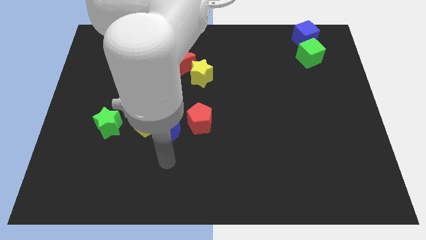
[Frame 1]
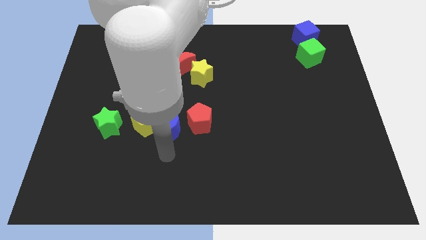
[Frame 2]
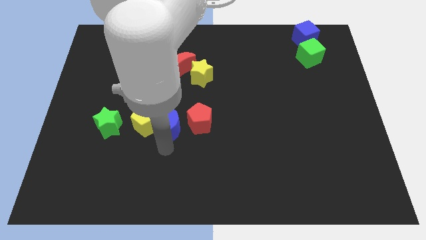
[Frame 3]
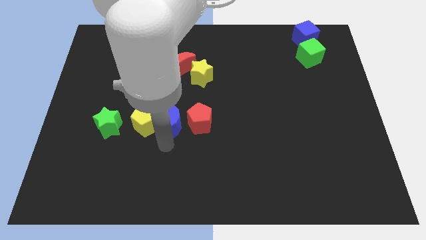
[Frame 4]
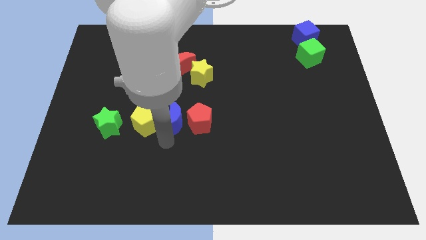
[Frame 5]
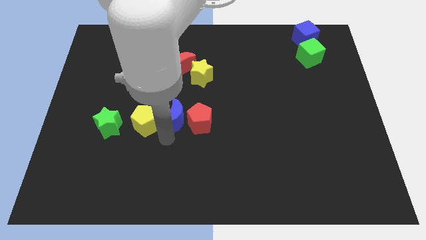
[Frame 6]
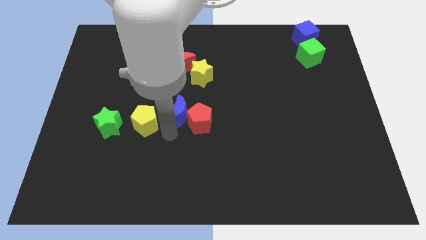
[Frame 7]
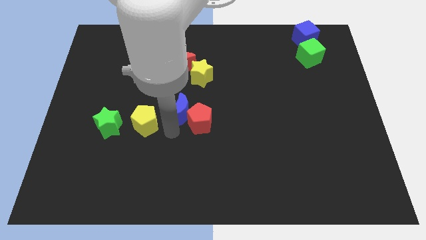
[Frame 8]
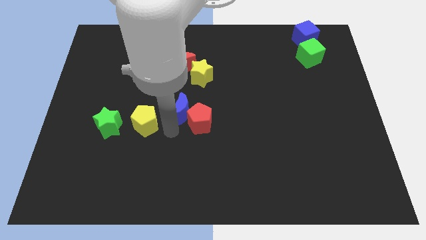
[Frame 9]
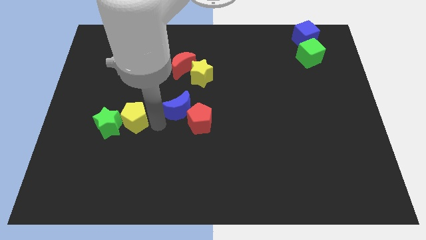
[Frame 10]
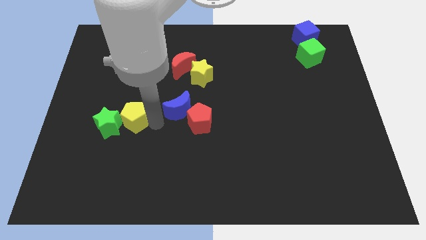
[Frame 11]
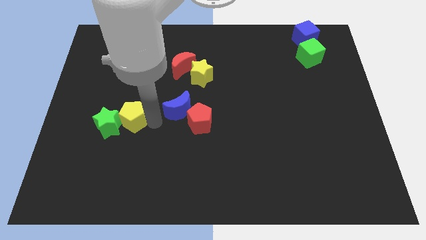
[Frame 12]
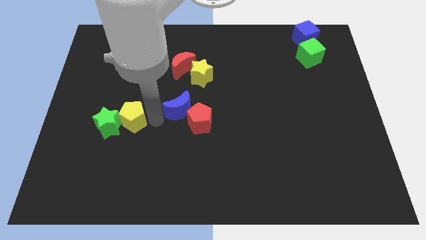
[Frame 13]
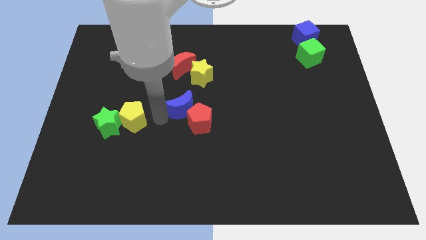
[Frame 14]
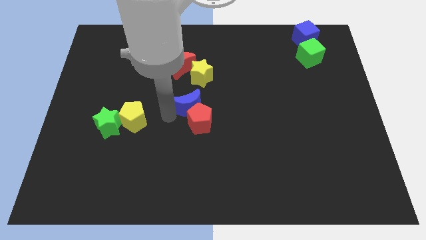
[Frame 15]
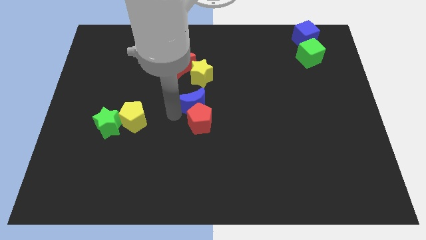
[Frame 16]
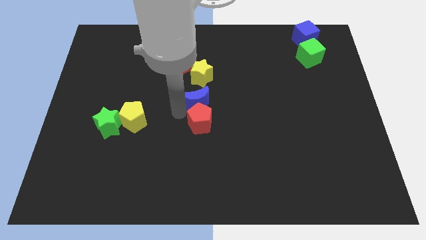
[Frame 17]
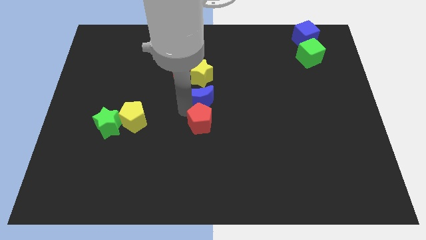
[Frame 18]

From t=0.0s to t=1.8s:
place the blue moon in between the yellow star and red pentagon

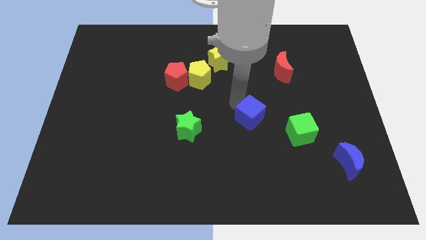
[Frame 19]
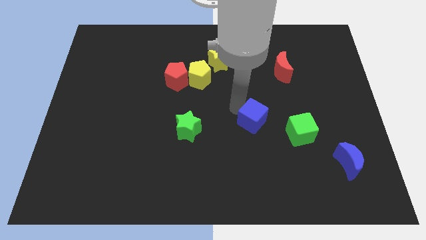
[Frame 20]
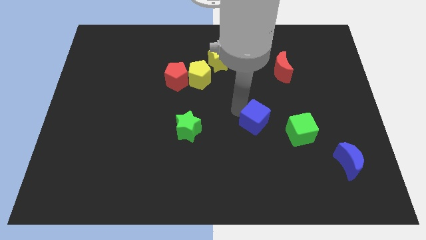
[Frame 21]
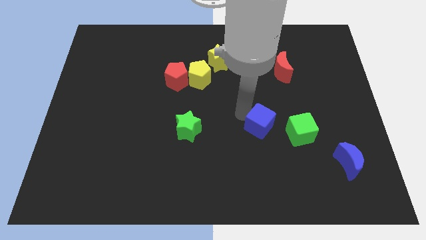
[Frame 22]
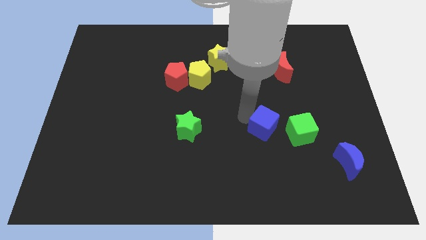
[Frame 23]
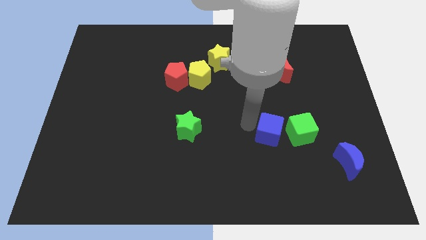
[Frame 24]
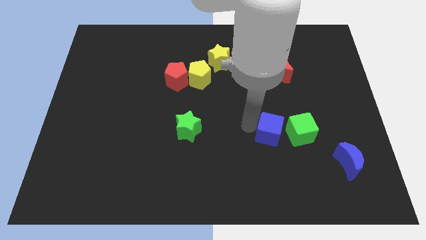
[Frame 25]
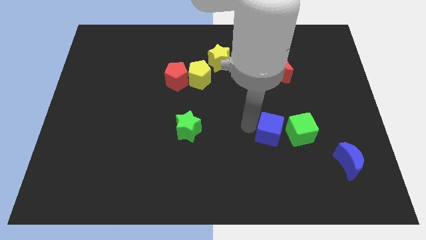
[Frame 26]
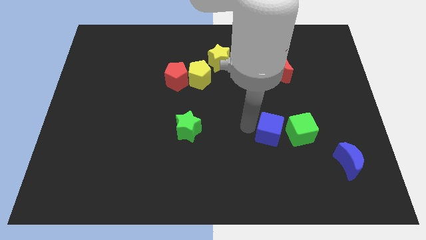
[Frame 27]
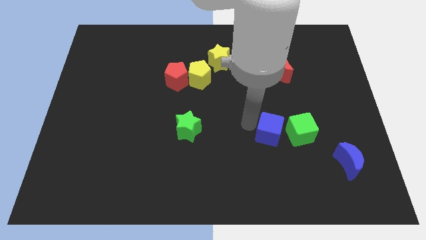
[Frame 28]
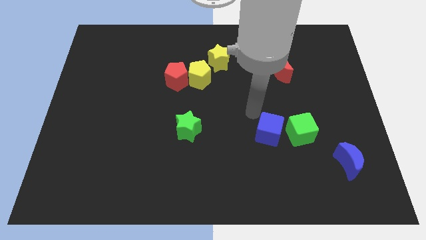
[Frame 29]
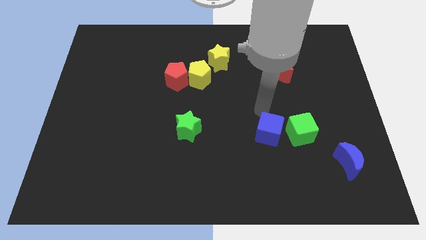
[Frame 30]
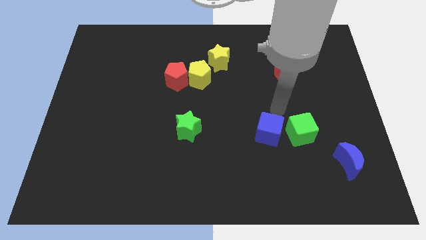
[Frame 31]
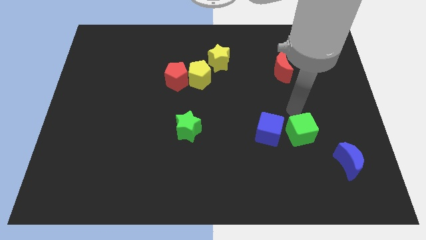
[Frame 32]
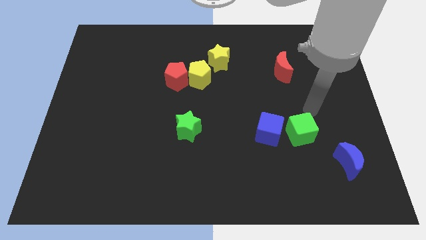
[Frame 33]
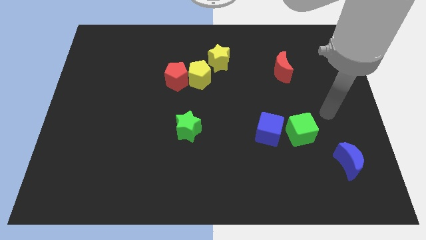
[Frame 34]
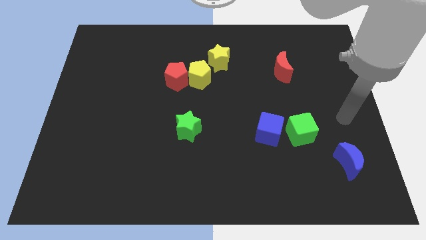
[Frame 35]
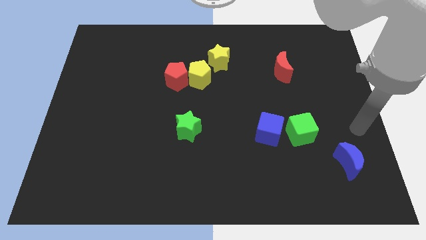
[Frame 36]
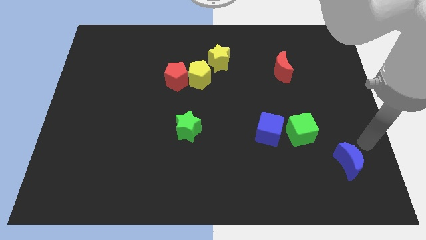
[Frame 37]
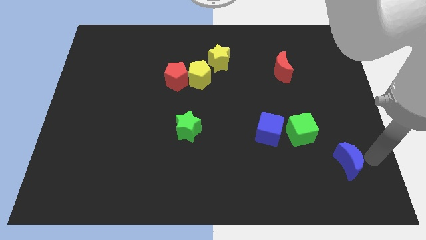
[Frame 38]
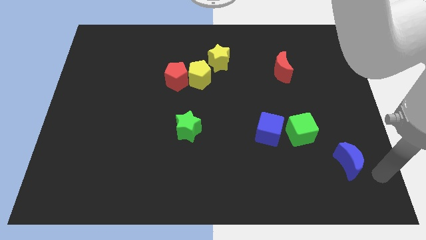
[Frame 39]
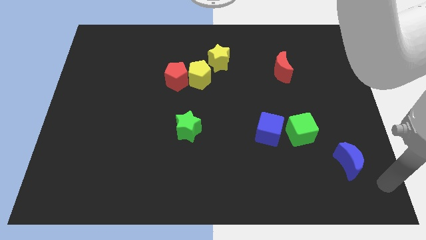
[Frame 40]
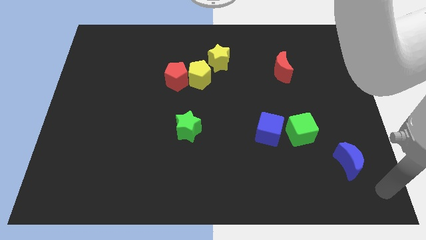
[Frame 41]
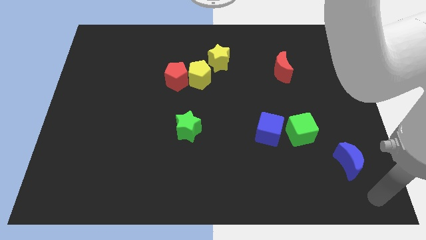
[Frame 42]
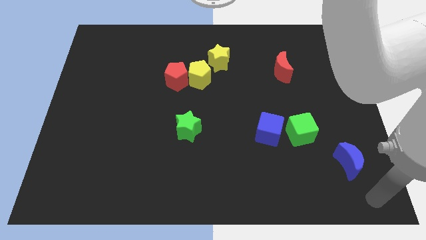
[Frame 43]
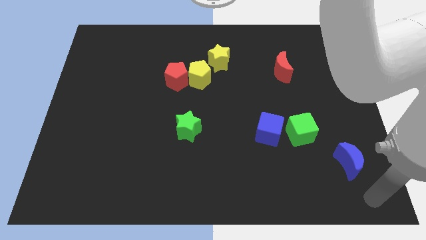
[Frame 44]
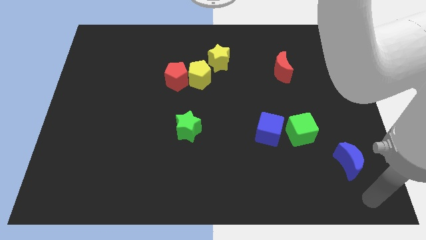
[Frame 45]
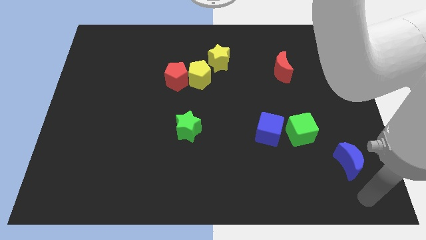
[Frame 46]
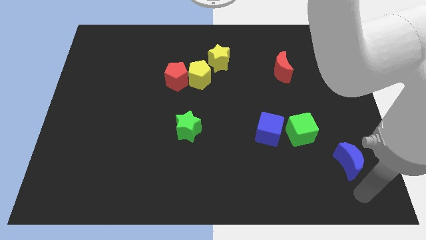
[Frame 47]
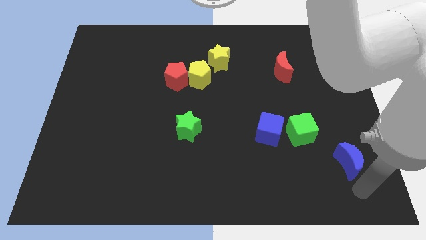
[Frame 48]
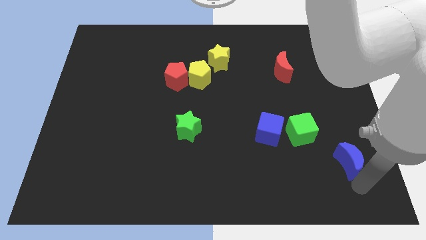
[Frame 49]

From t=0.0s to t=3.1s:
place the arm below the blue moon

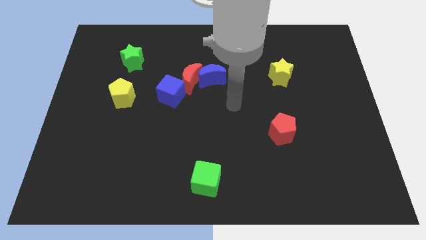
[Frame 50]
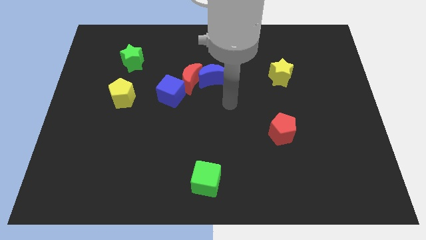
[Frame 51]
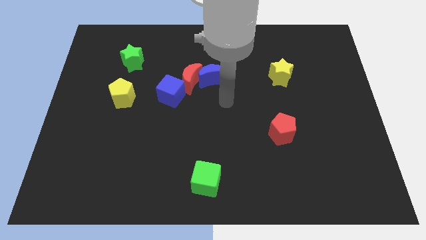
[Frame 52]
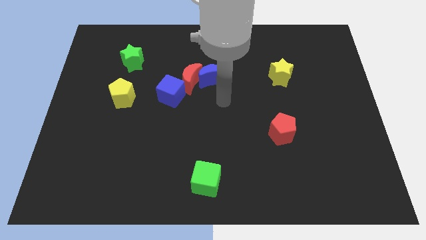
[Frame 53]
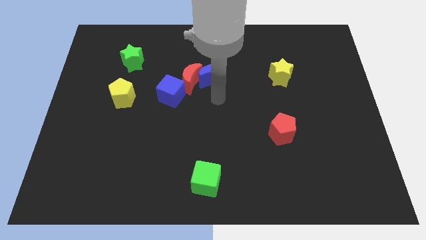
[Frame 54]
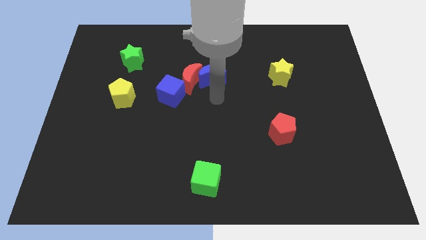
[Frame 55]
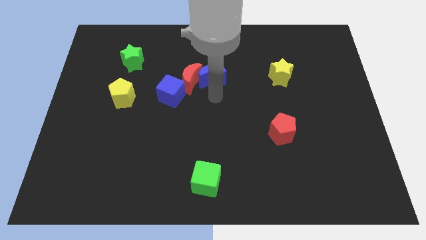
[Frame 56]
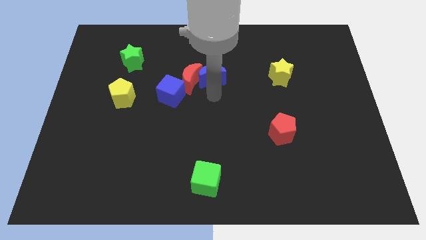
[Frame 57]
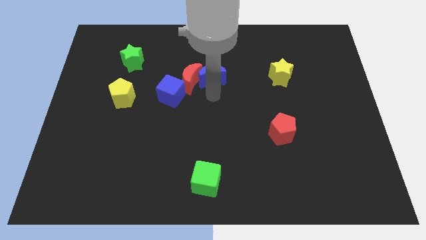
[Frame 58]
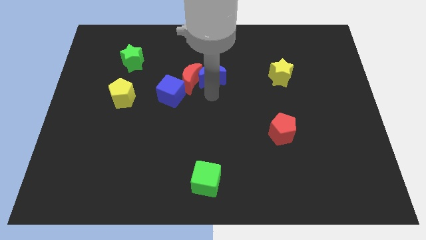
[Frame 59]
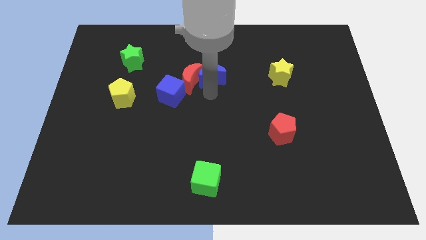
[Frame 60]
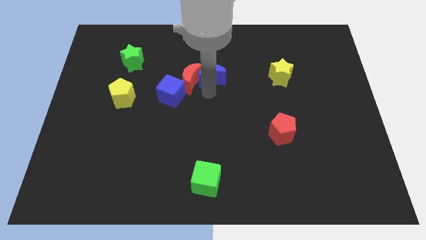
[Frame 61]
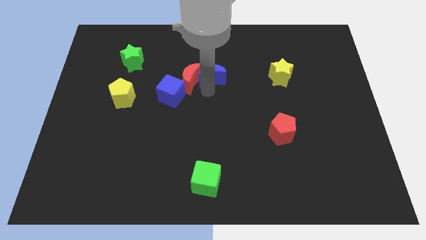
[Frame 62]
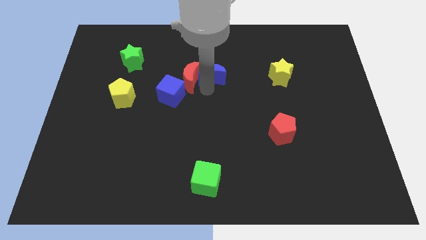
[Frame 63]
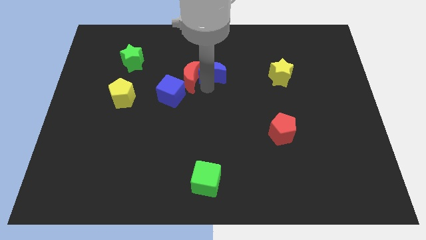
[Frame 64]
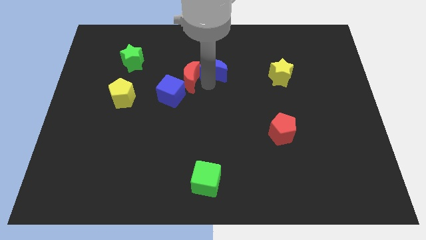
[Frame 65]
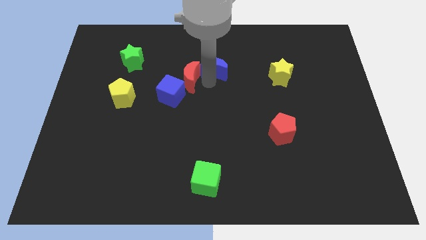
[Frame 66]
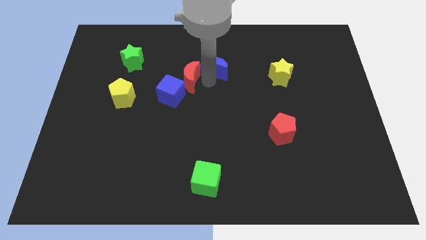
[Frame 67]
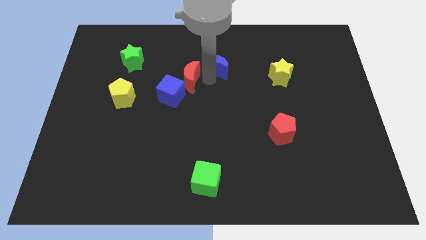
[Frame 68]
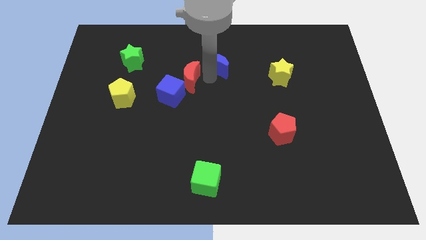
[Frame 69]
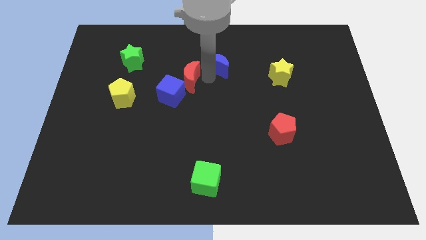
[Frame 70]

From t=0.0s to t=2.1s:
separate the red moon and blue moon

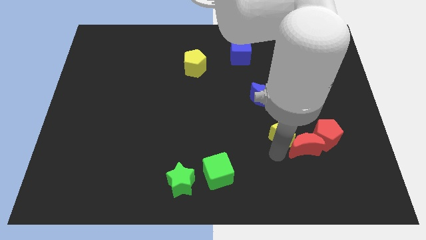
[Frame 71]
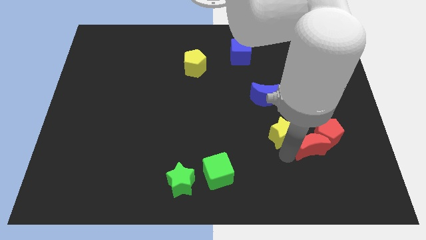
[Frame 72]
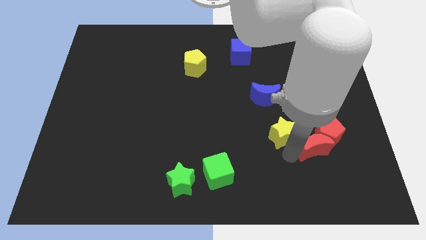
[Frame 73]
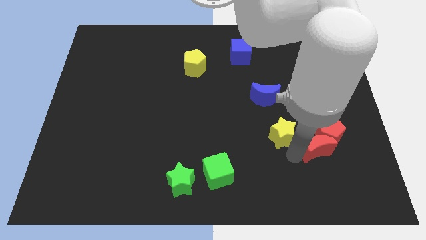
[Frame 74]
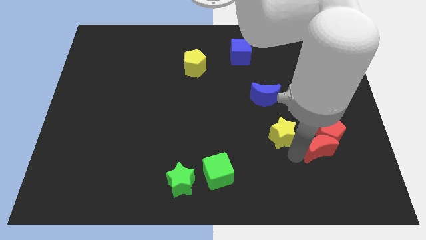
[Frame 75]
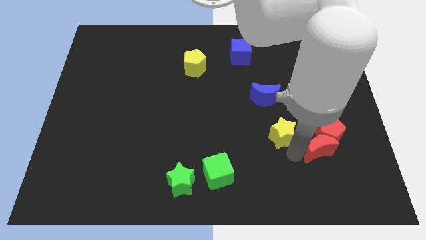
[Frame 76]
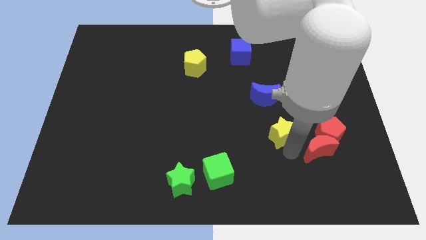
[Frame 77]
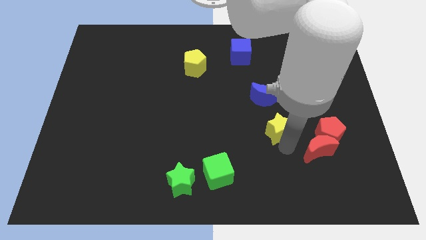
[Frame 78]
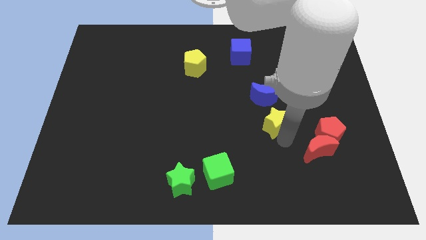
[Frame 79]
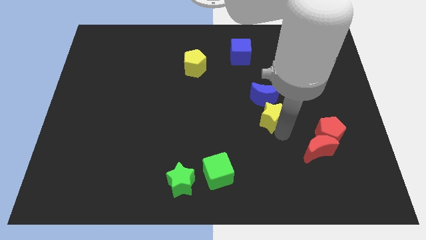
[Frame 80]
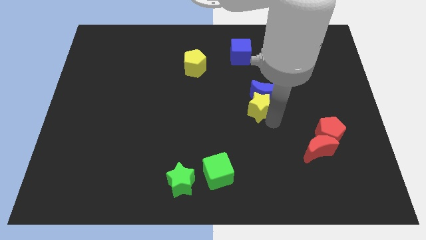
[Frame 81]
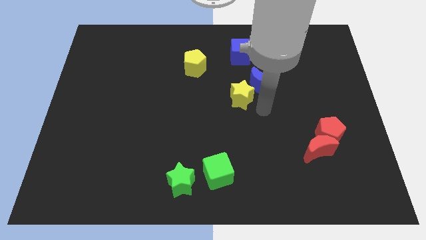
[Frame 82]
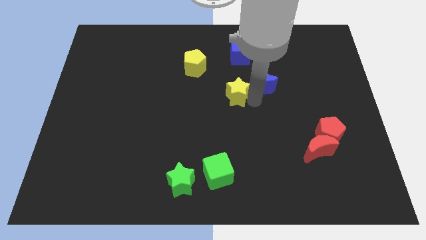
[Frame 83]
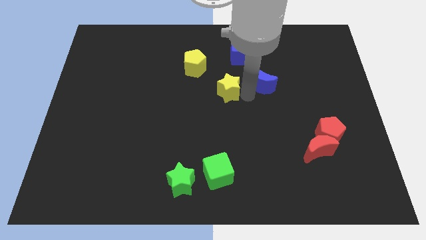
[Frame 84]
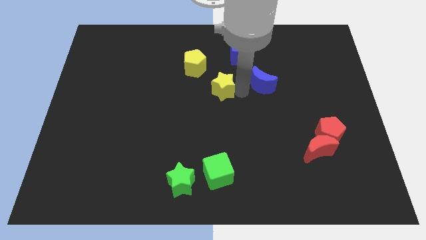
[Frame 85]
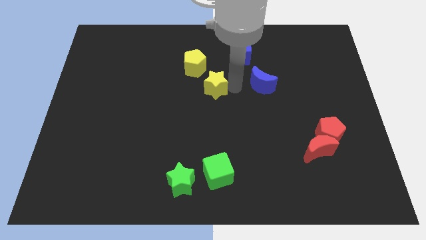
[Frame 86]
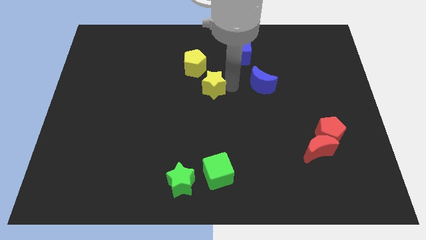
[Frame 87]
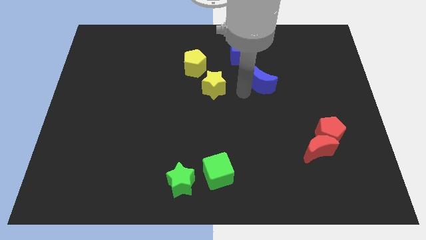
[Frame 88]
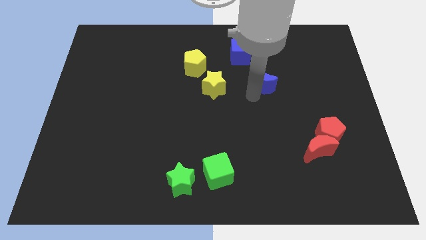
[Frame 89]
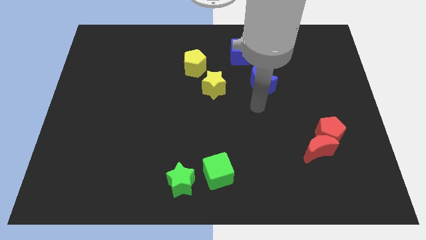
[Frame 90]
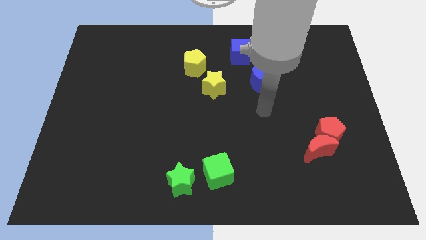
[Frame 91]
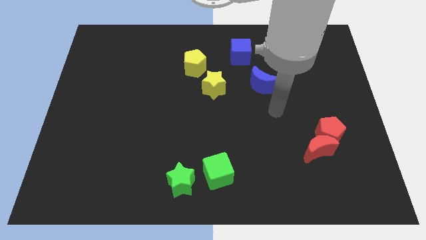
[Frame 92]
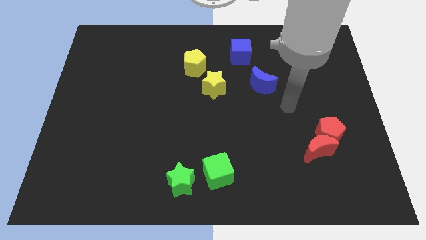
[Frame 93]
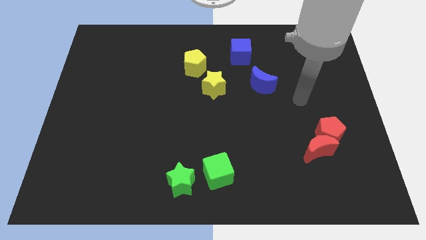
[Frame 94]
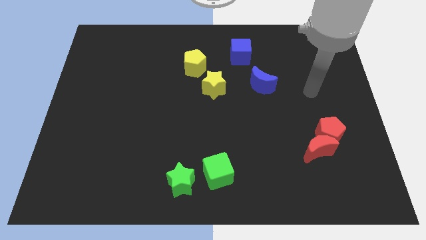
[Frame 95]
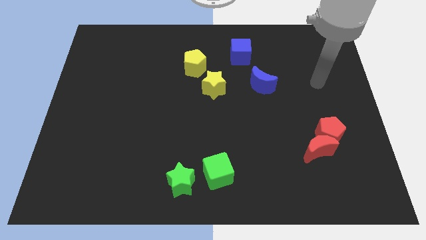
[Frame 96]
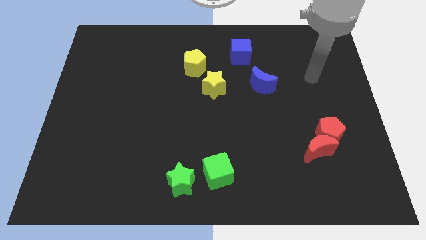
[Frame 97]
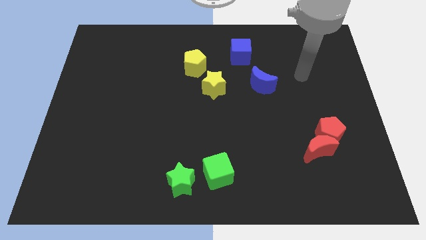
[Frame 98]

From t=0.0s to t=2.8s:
separate yellow star from red crescent
